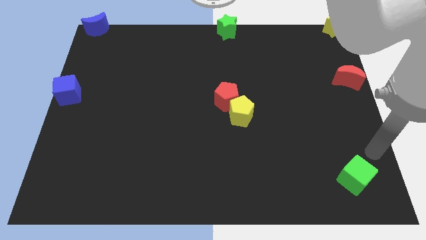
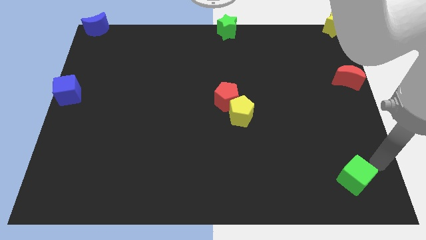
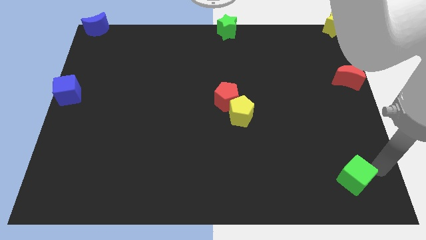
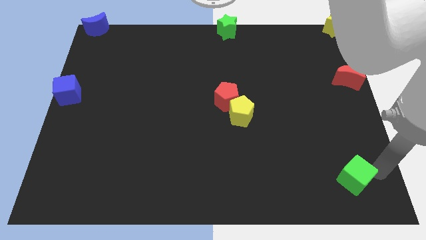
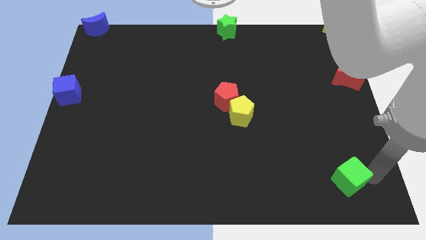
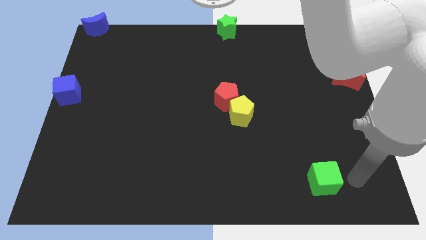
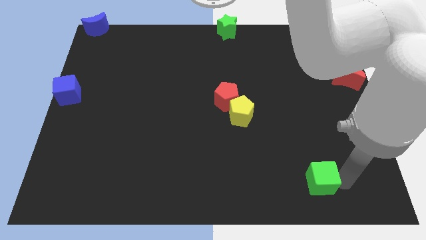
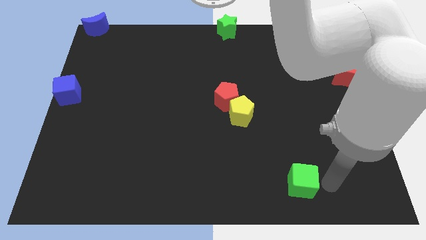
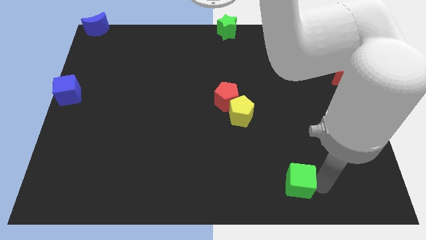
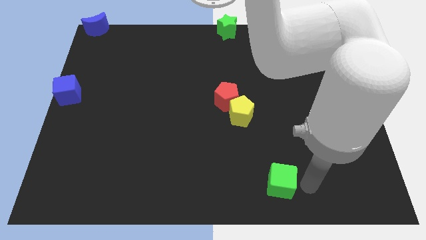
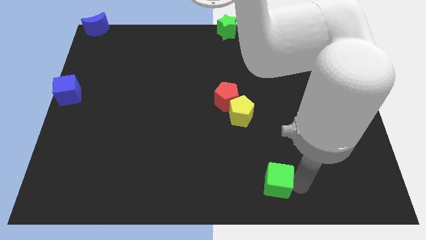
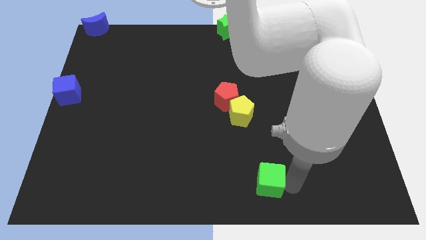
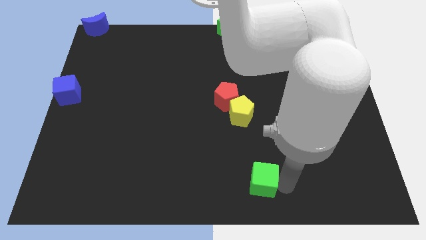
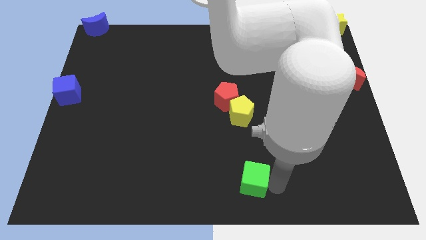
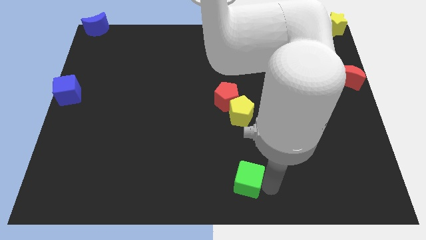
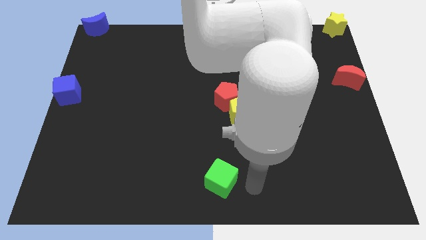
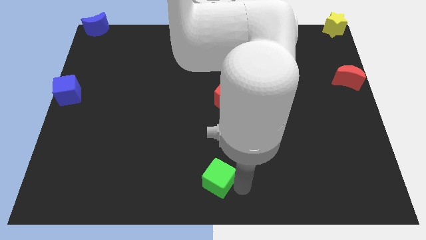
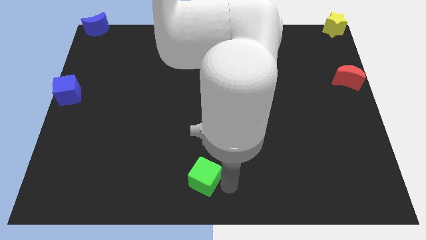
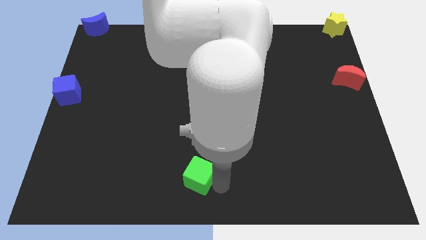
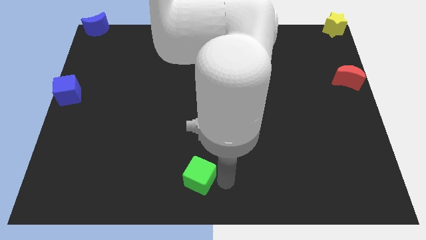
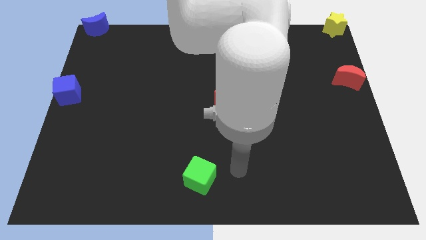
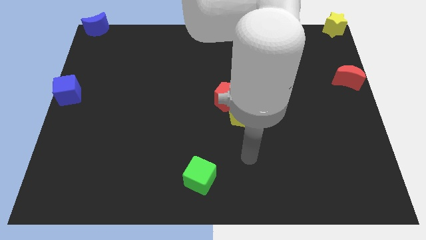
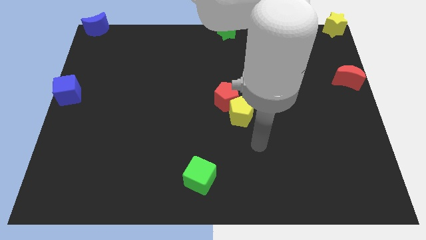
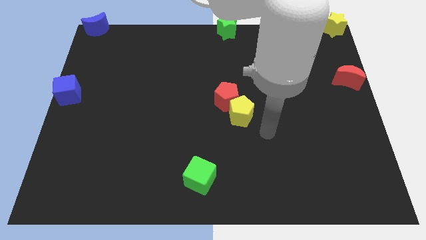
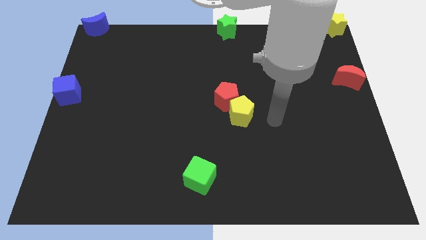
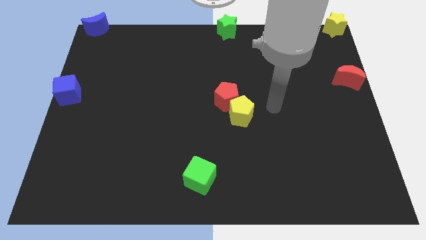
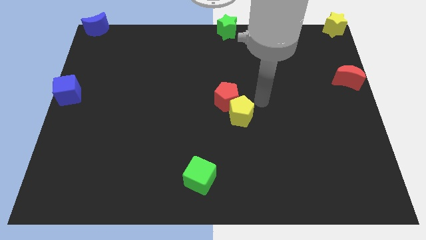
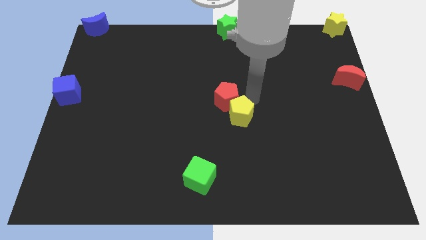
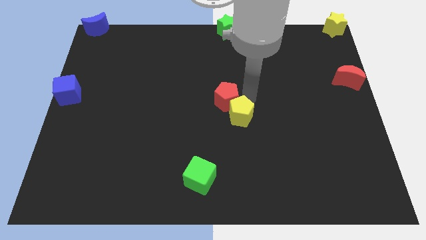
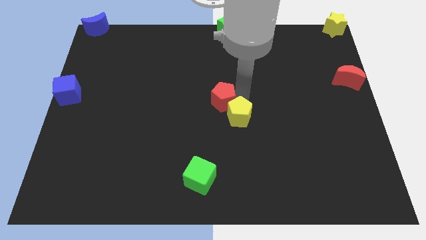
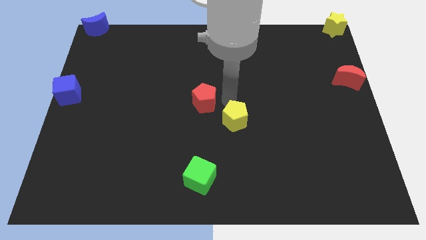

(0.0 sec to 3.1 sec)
push the green cube to the bottom center of the board

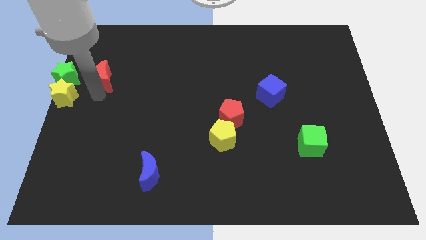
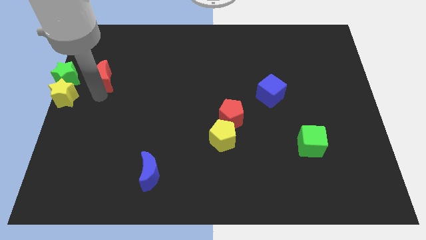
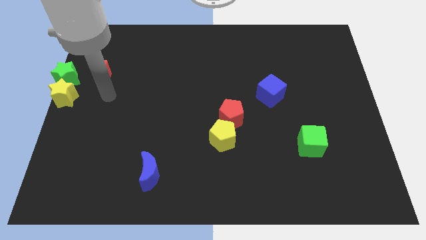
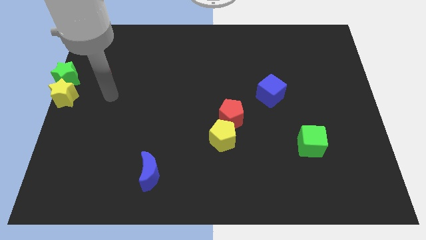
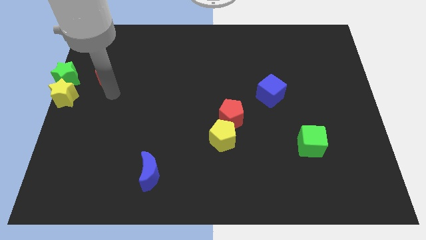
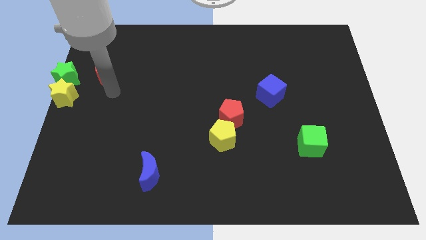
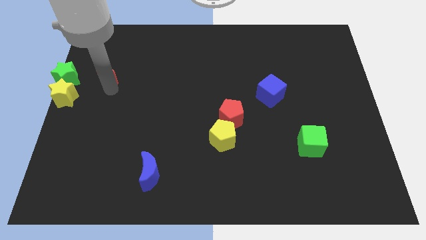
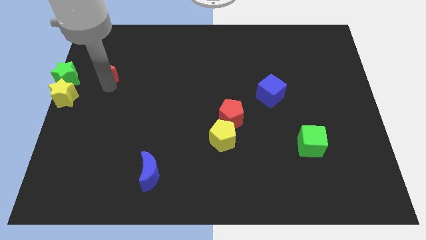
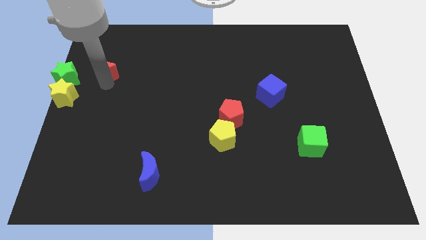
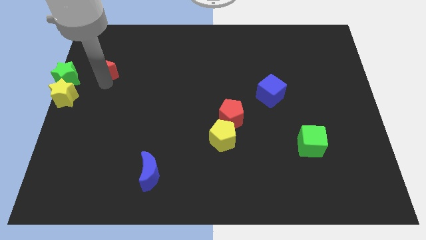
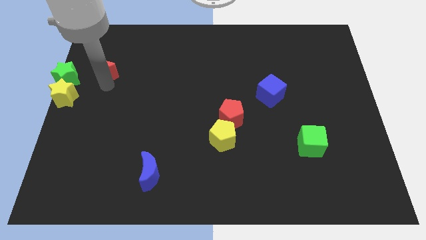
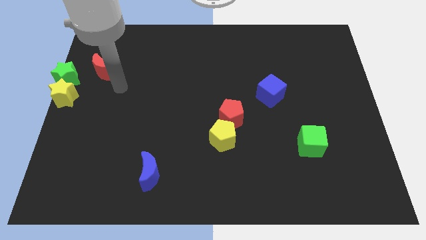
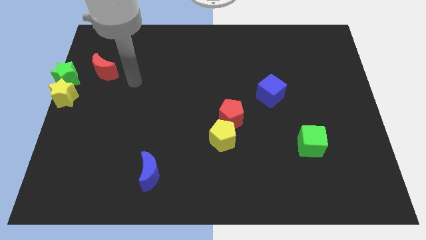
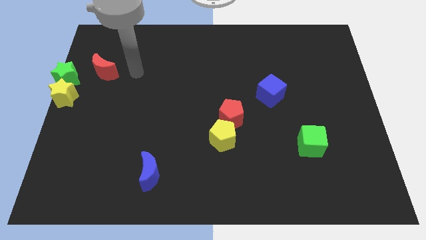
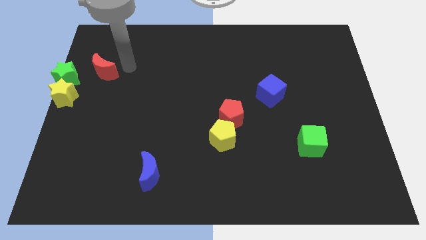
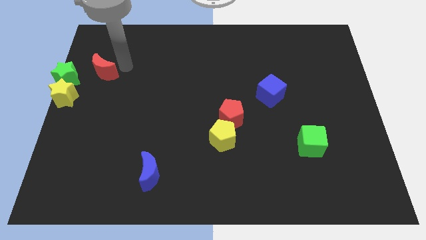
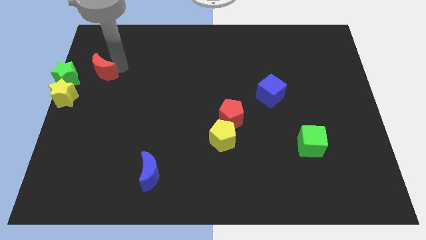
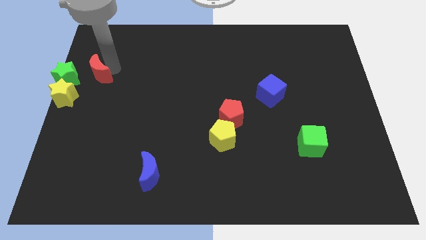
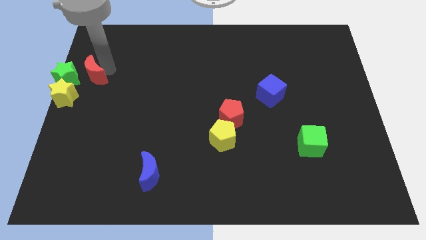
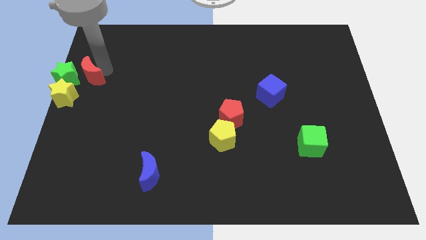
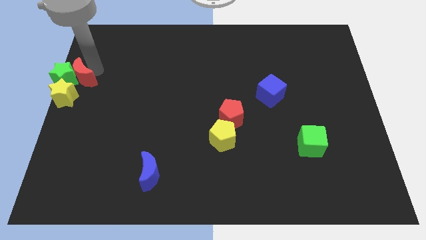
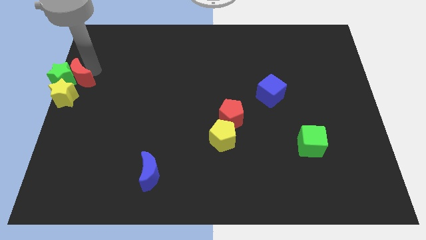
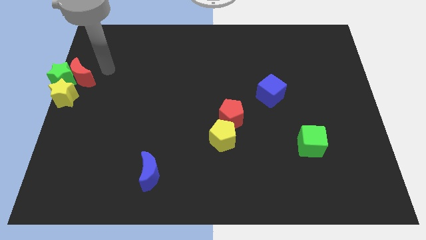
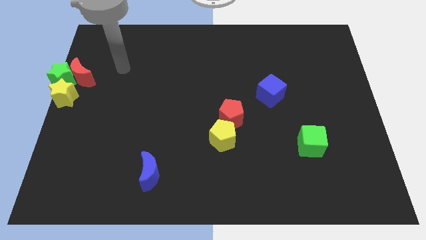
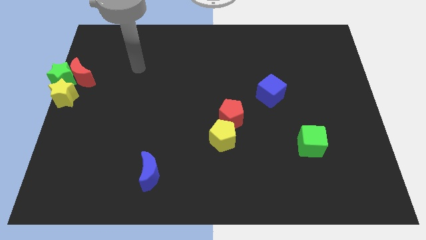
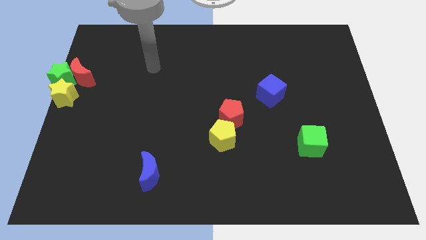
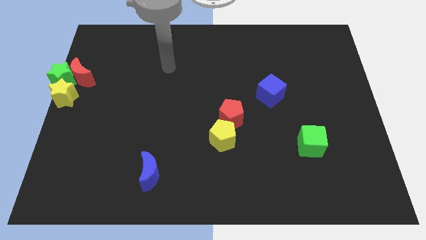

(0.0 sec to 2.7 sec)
push the red moon into the green star

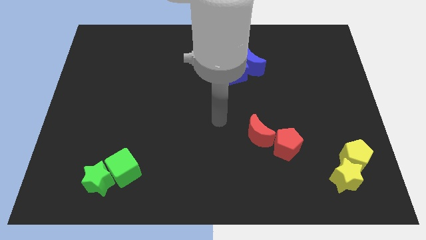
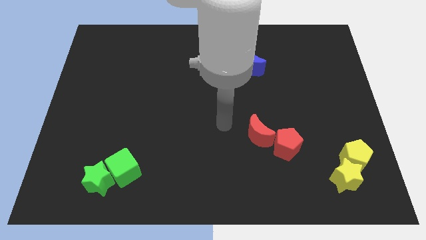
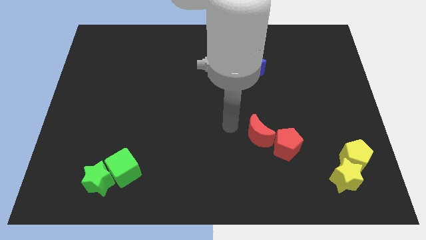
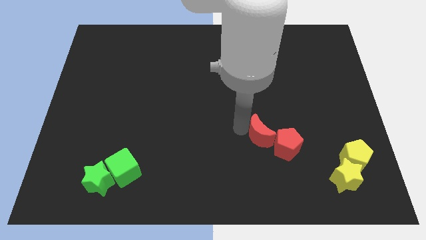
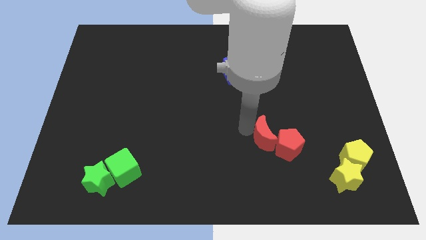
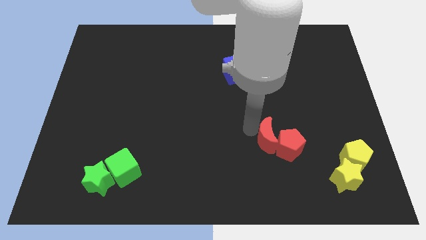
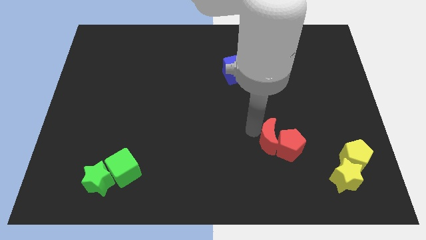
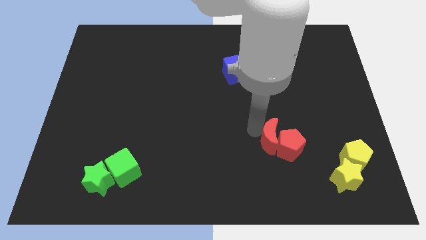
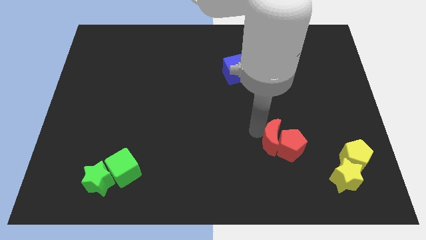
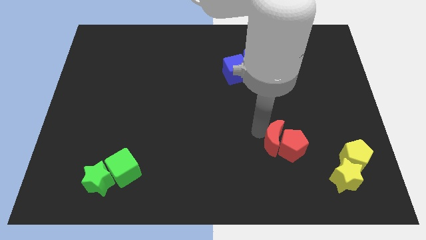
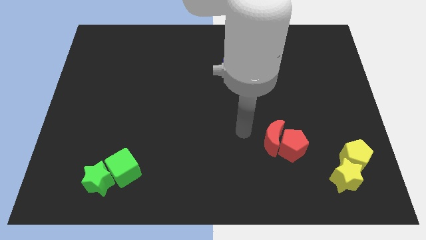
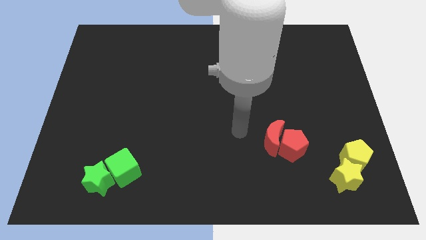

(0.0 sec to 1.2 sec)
move the red crescent into the red pentagon

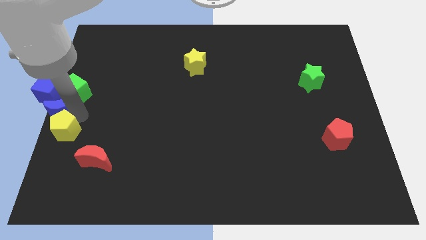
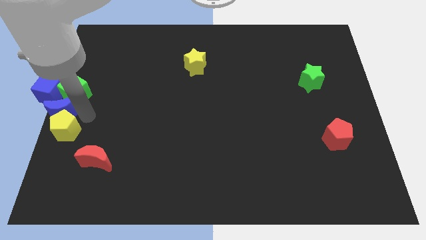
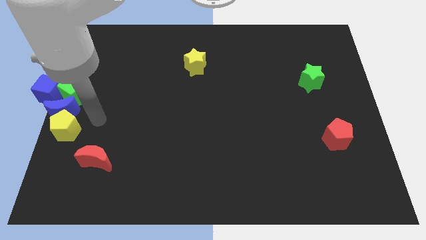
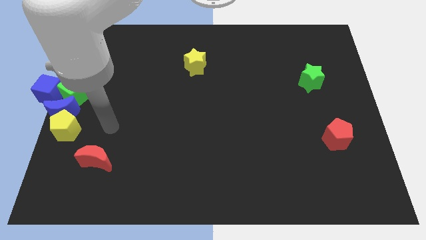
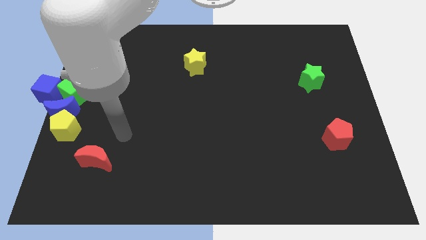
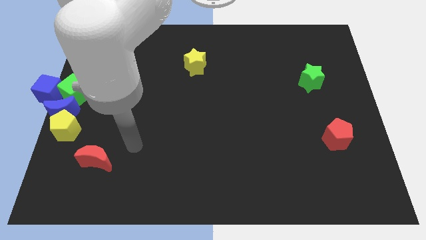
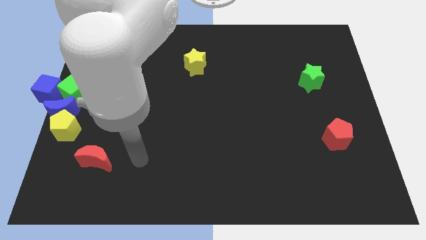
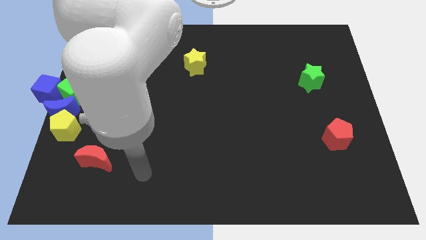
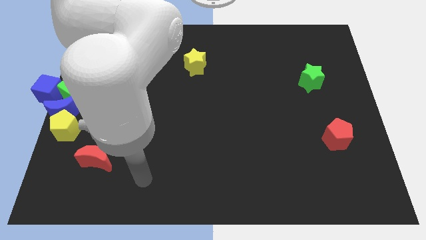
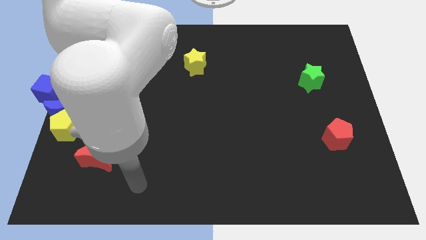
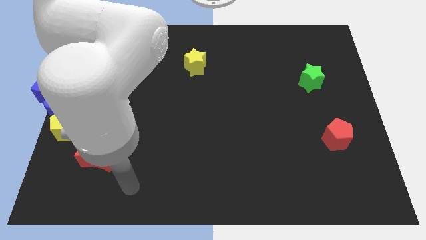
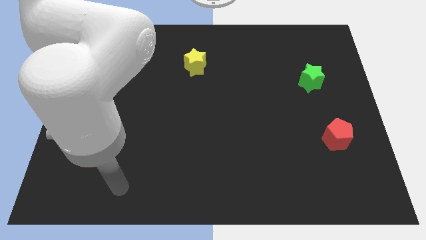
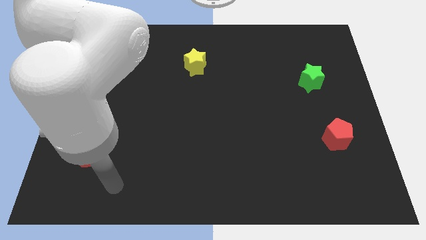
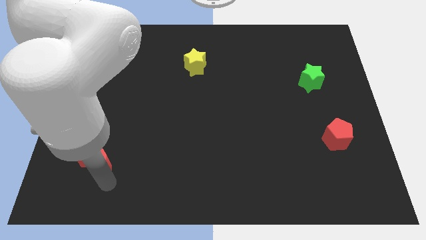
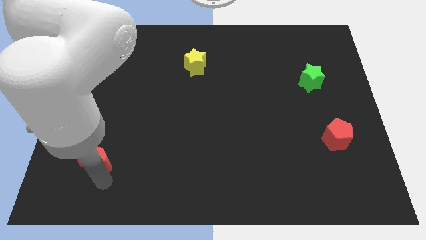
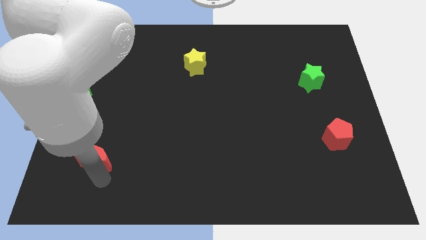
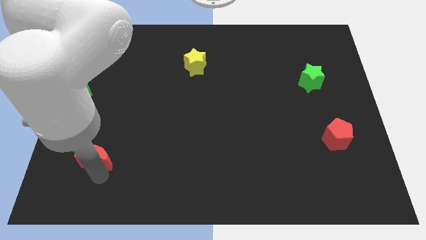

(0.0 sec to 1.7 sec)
move your arm towards the red block

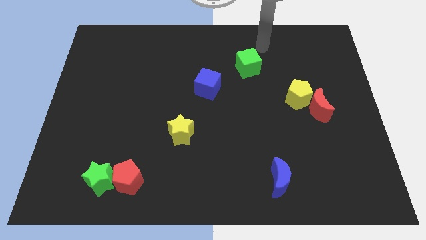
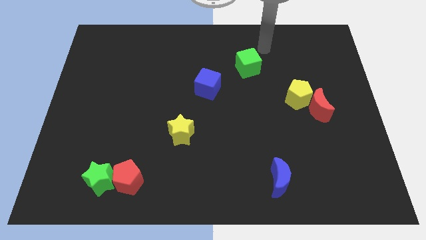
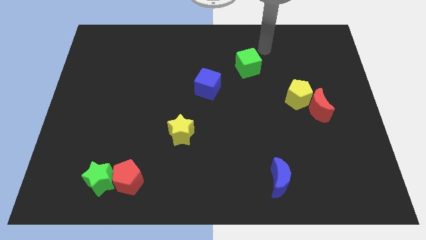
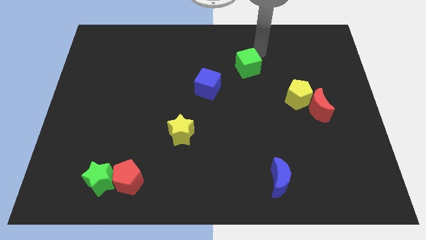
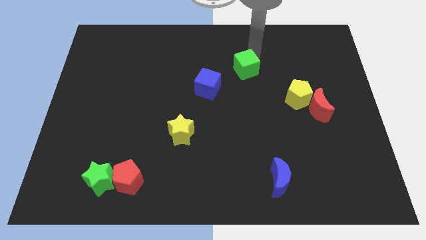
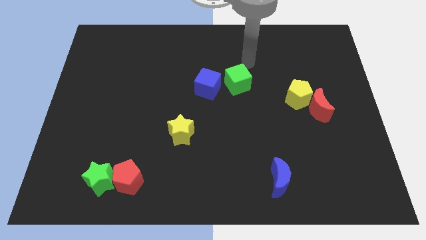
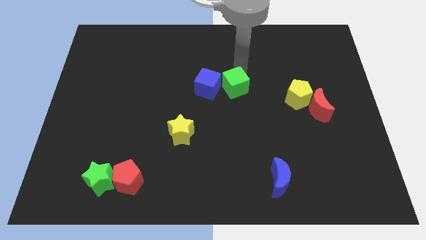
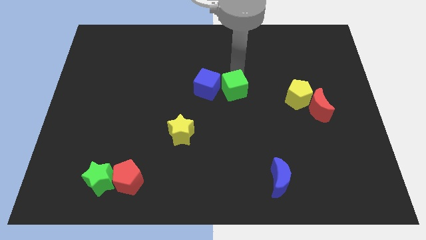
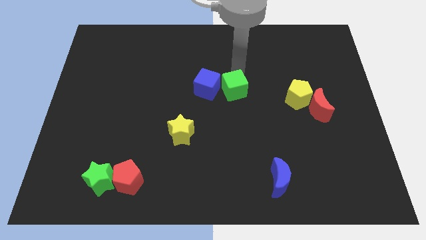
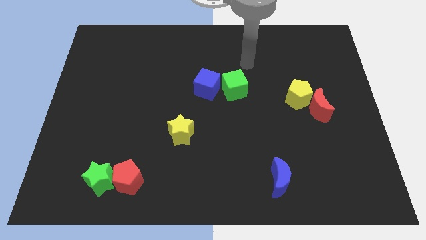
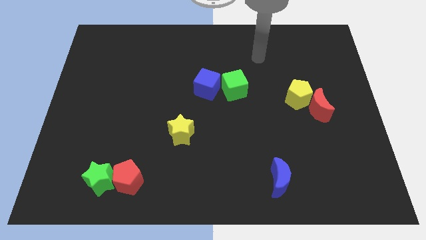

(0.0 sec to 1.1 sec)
push the green cube into blue cube
